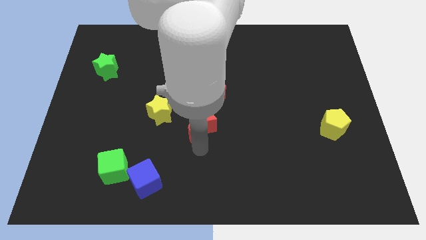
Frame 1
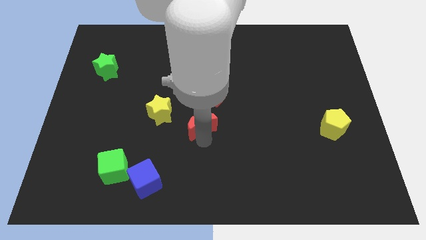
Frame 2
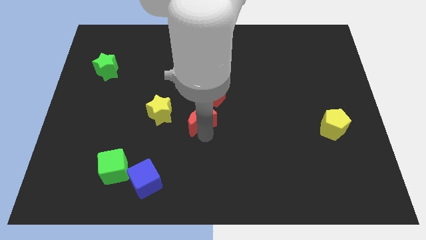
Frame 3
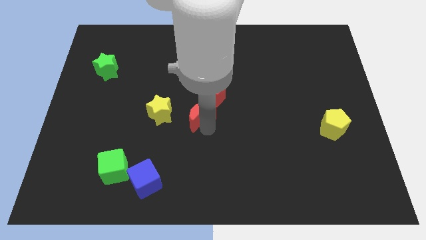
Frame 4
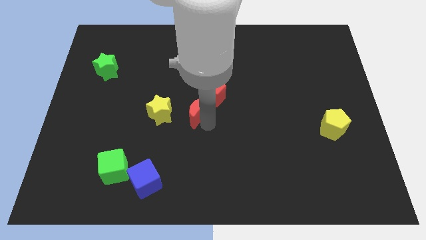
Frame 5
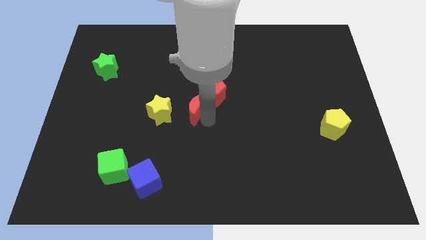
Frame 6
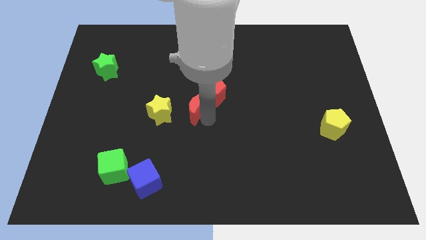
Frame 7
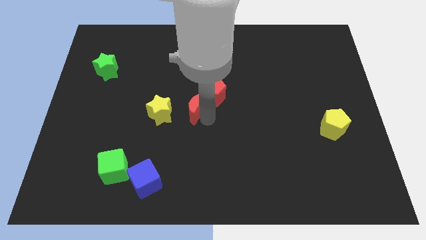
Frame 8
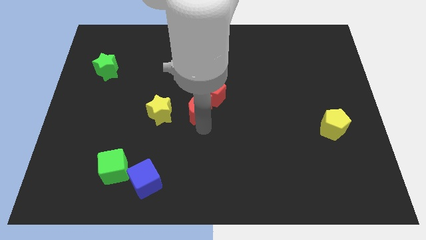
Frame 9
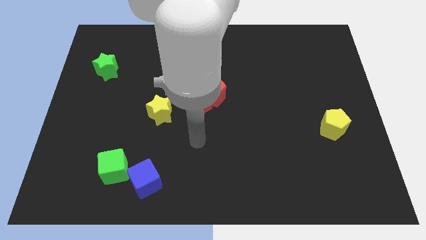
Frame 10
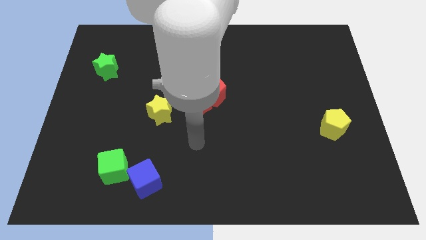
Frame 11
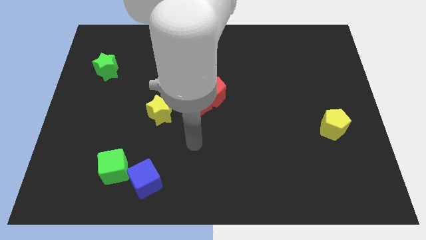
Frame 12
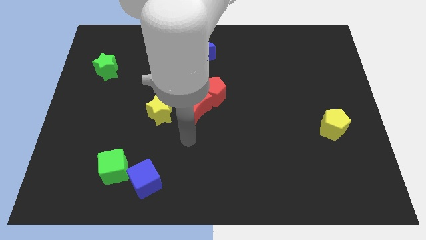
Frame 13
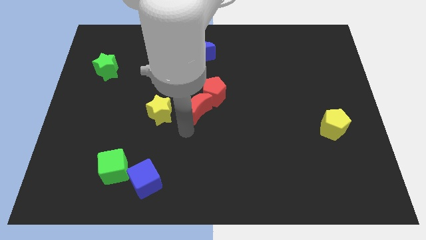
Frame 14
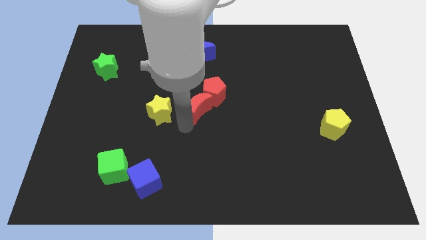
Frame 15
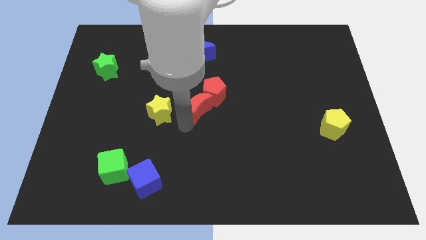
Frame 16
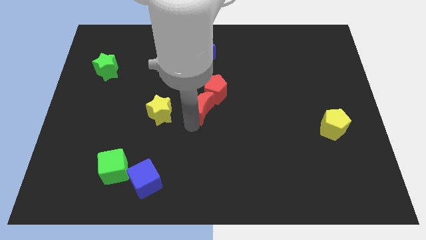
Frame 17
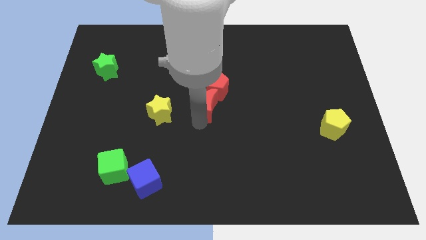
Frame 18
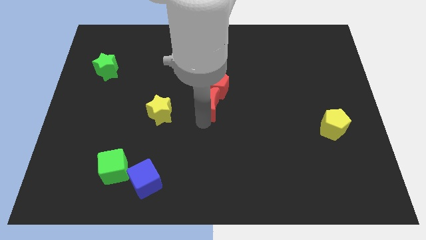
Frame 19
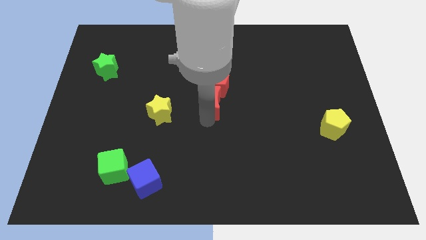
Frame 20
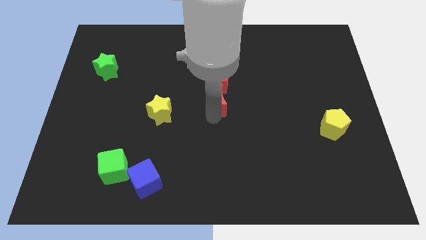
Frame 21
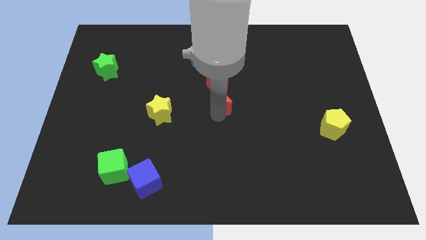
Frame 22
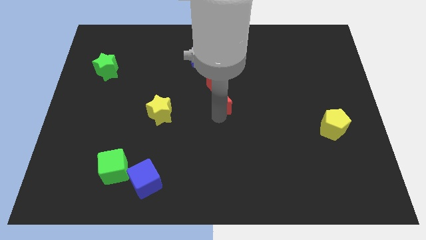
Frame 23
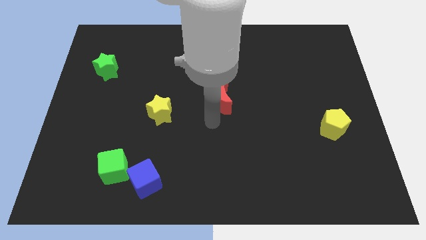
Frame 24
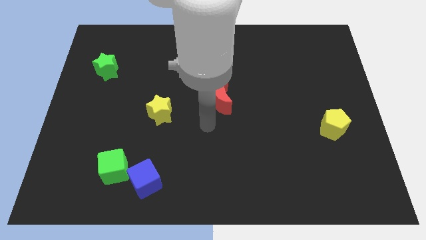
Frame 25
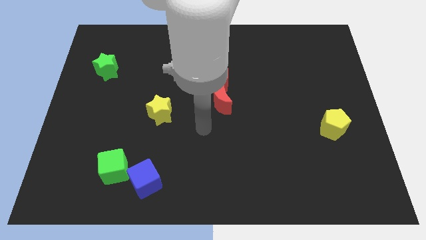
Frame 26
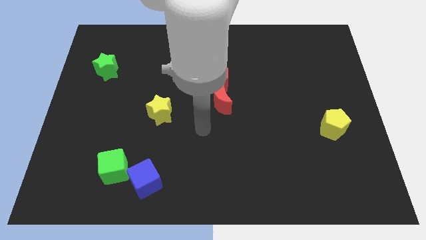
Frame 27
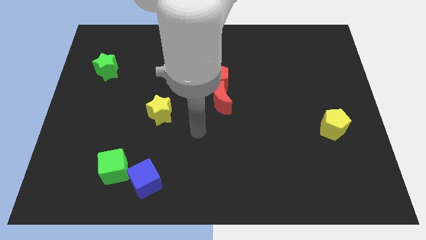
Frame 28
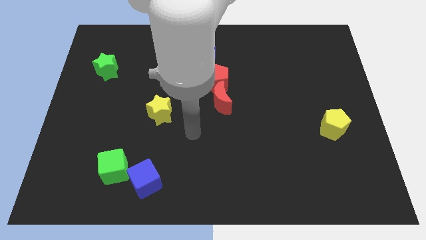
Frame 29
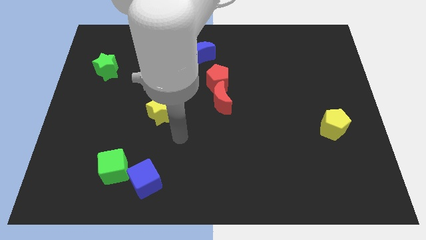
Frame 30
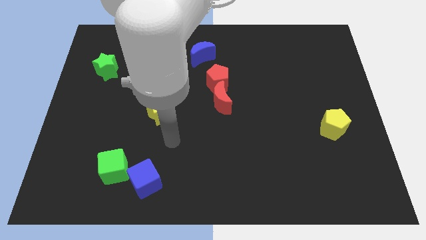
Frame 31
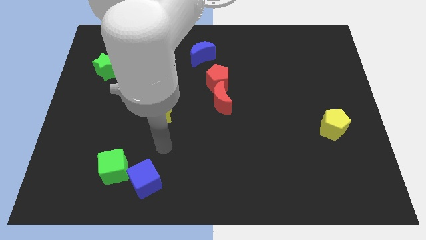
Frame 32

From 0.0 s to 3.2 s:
push the red moon in the red pentagon

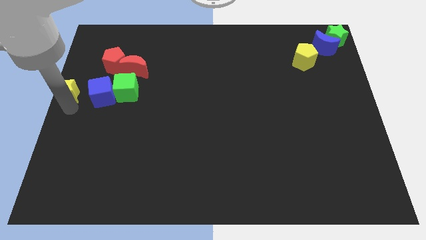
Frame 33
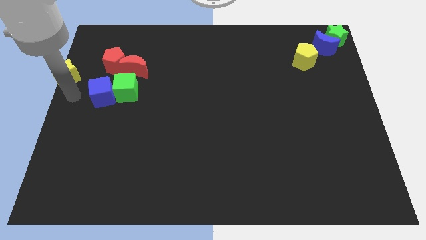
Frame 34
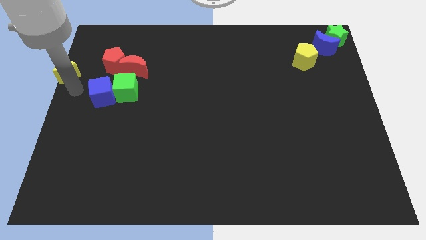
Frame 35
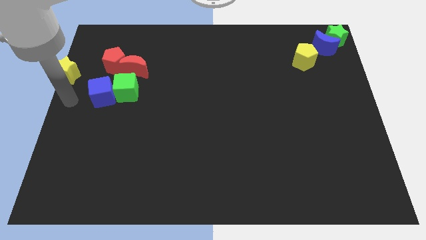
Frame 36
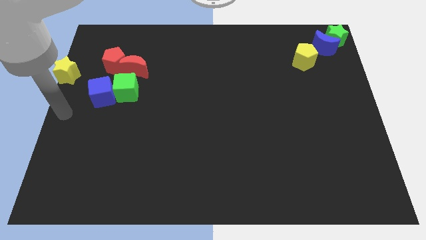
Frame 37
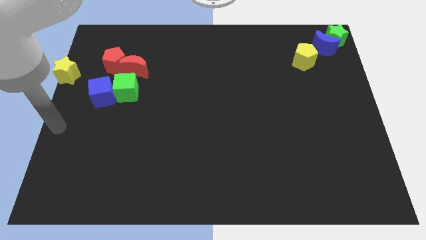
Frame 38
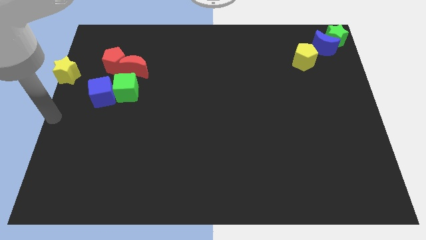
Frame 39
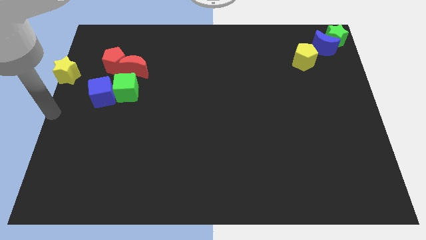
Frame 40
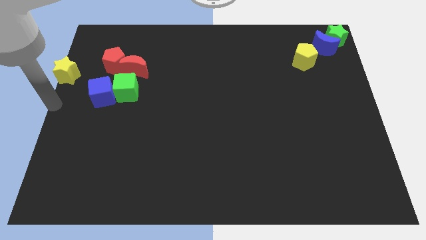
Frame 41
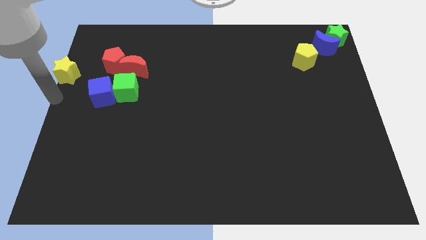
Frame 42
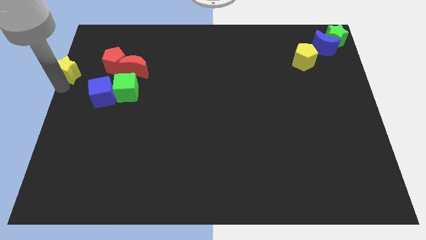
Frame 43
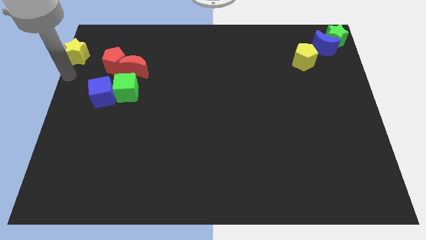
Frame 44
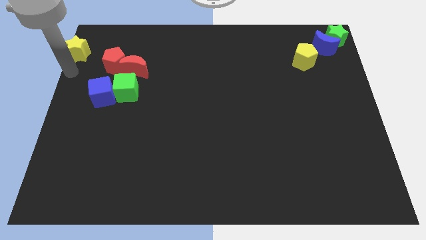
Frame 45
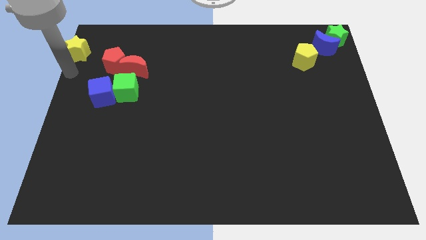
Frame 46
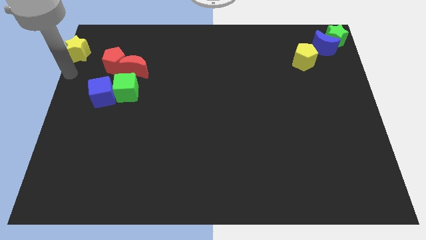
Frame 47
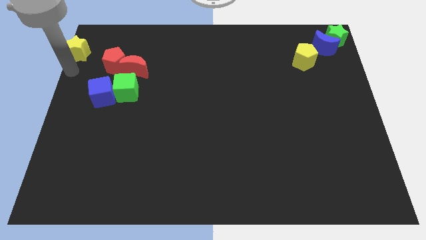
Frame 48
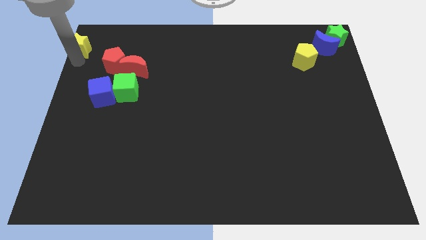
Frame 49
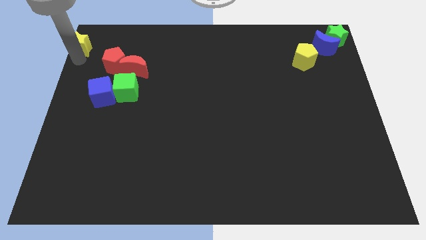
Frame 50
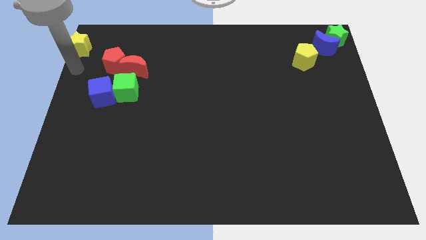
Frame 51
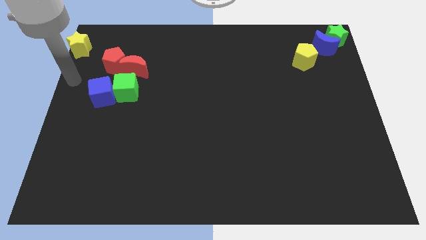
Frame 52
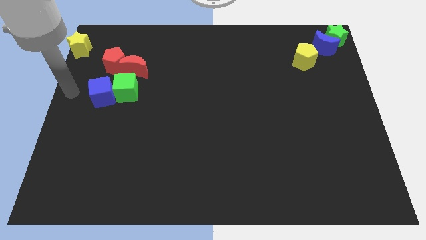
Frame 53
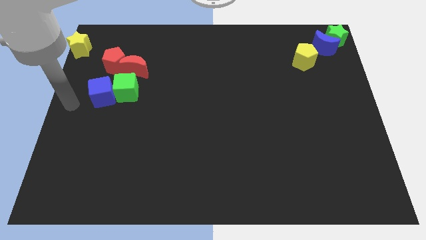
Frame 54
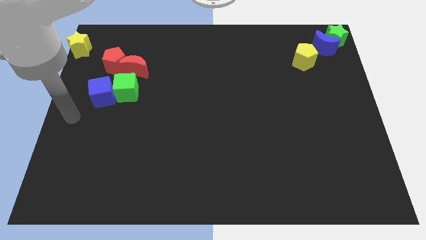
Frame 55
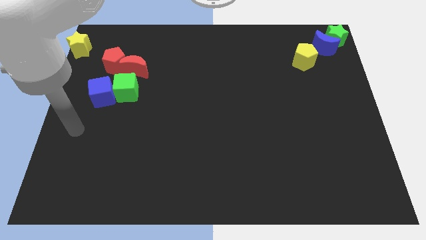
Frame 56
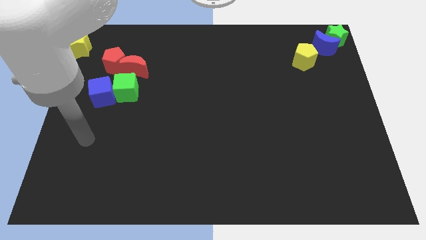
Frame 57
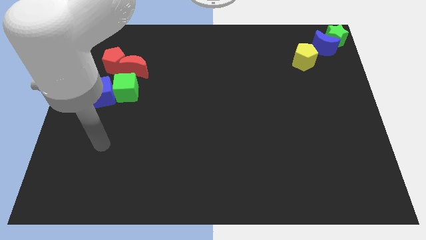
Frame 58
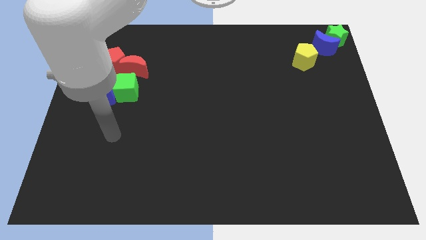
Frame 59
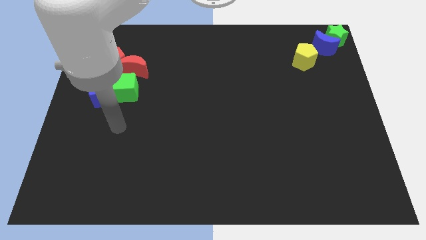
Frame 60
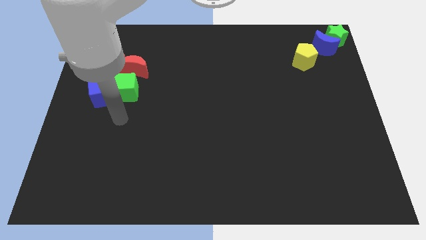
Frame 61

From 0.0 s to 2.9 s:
push the yellow star towards the top left corner

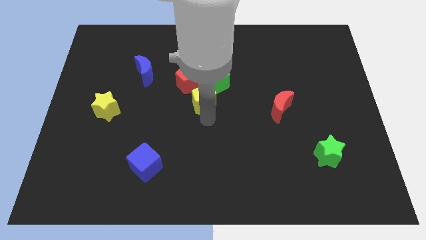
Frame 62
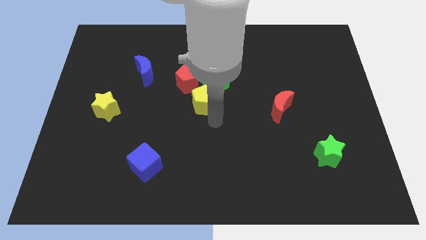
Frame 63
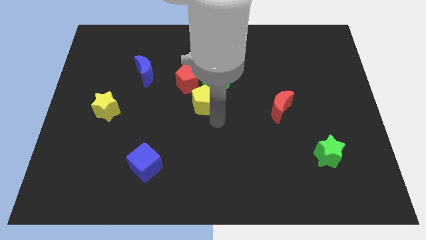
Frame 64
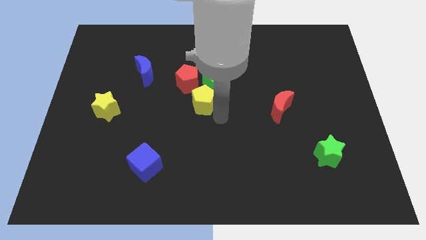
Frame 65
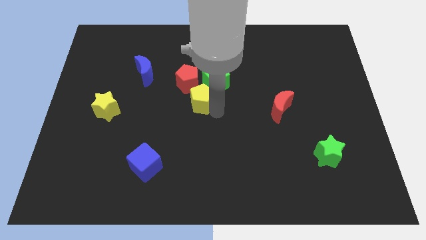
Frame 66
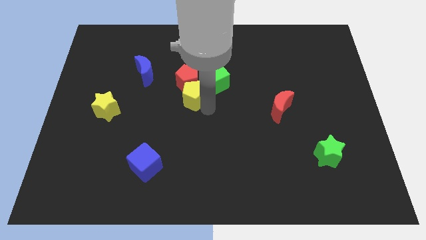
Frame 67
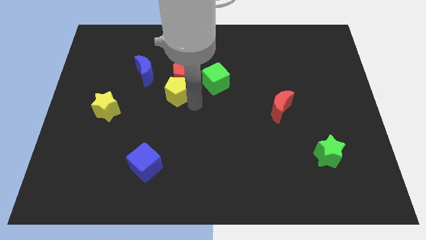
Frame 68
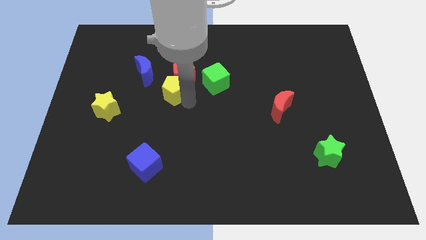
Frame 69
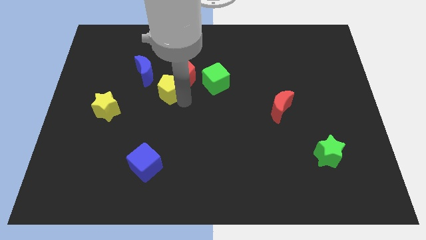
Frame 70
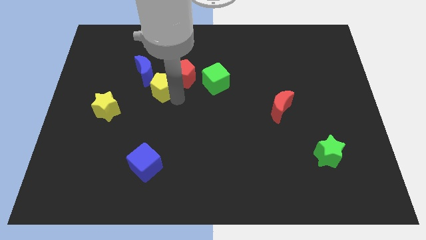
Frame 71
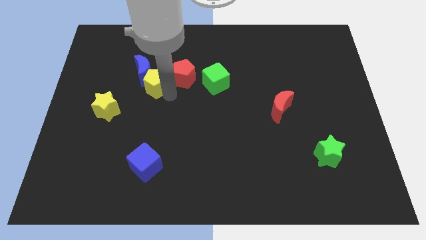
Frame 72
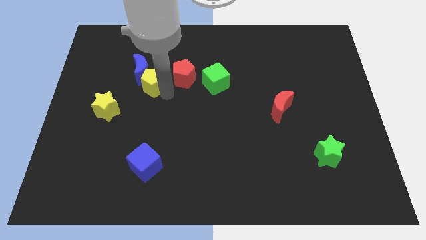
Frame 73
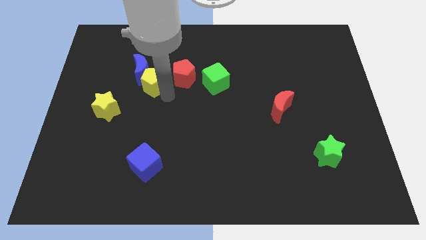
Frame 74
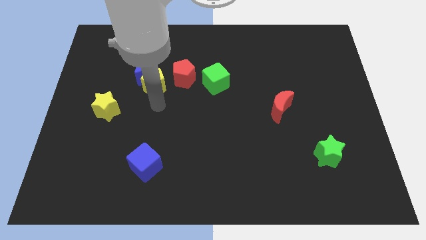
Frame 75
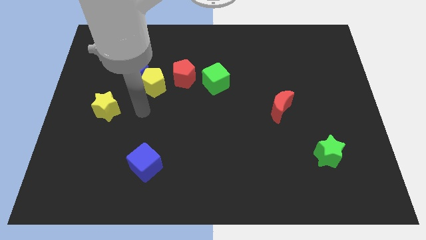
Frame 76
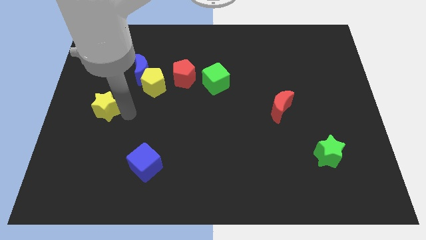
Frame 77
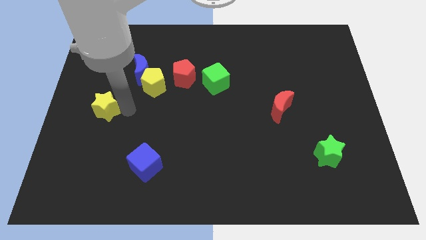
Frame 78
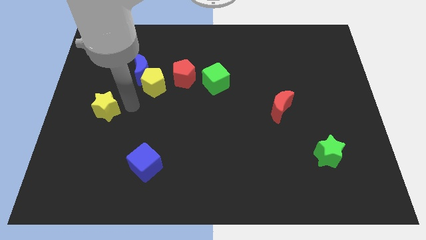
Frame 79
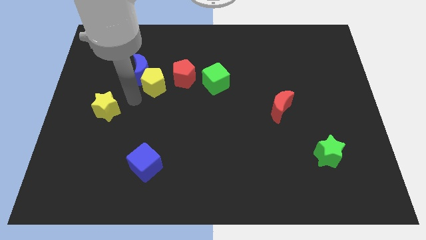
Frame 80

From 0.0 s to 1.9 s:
move yellow pentagon towards blue moon

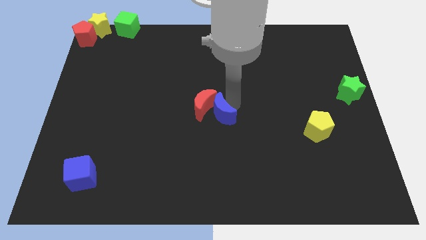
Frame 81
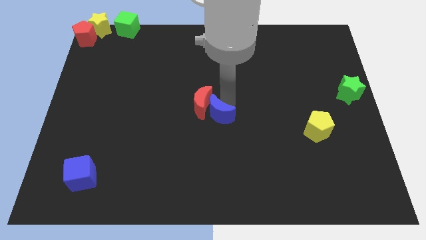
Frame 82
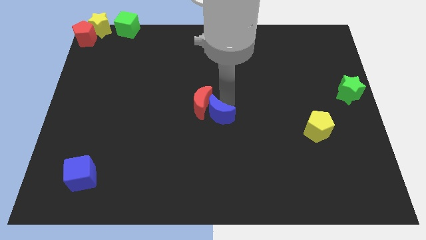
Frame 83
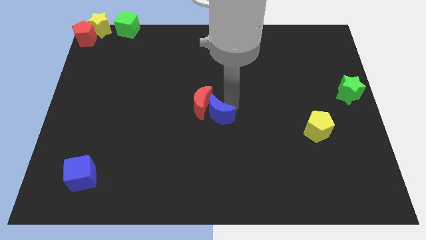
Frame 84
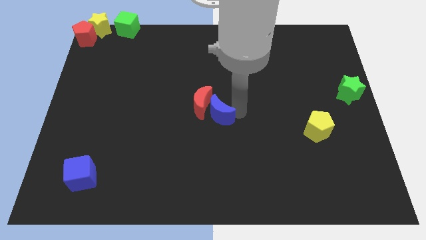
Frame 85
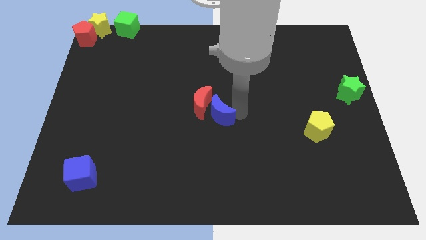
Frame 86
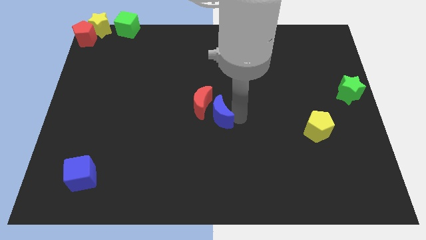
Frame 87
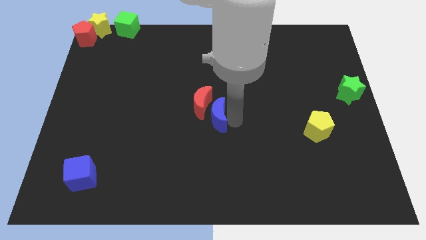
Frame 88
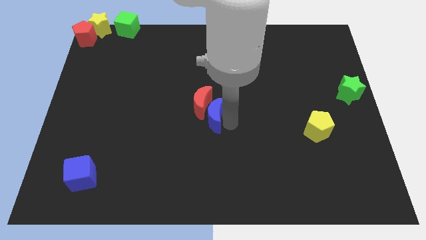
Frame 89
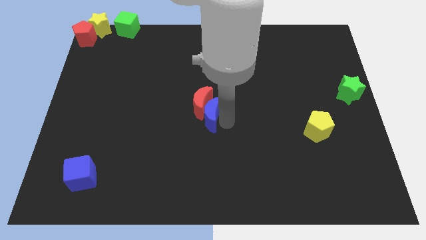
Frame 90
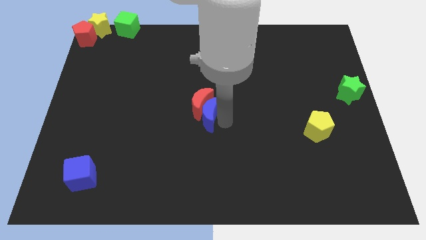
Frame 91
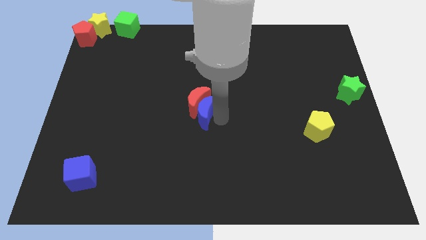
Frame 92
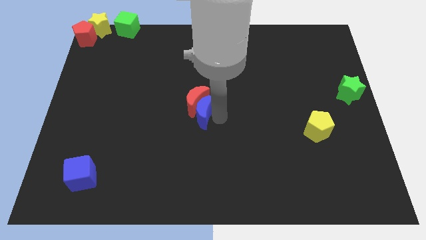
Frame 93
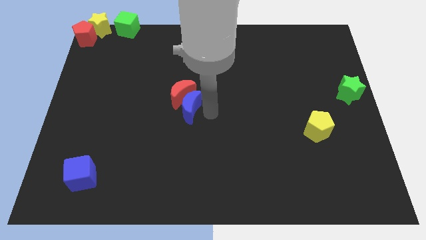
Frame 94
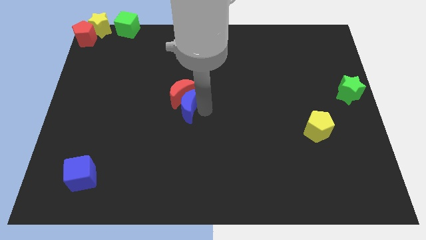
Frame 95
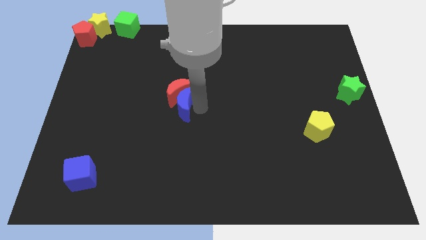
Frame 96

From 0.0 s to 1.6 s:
push the blue moon into the red moon
